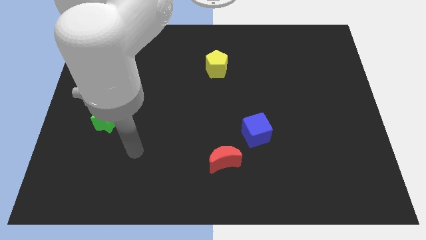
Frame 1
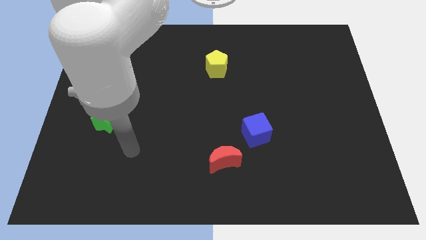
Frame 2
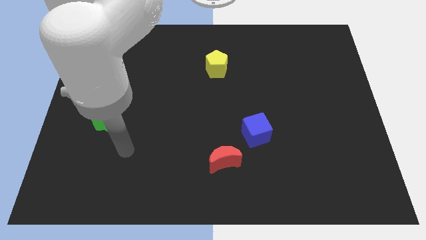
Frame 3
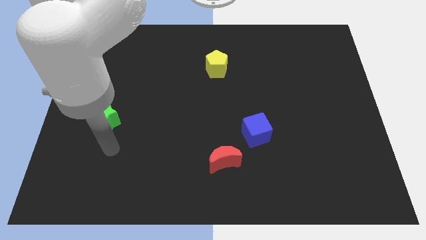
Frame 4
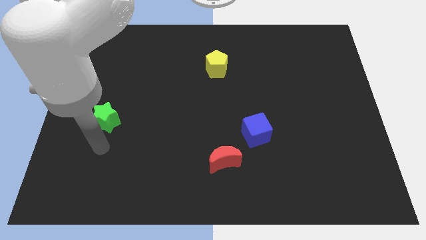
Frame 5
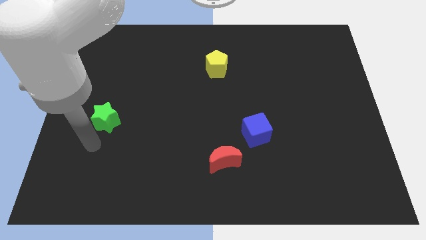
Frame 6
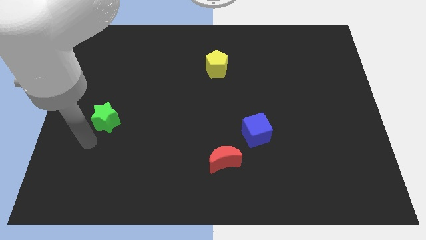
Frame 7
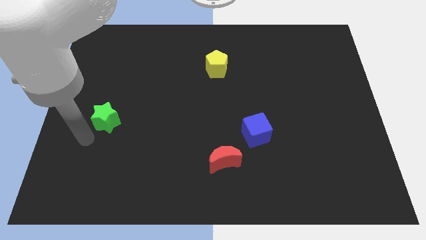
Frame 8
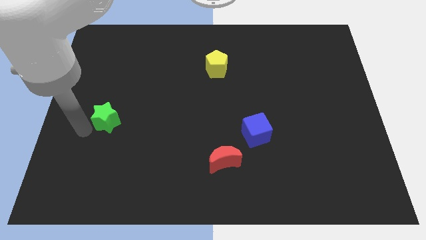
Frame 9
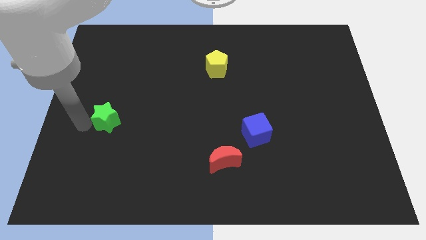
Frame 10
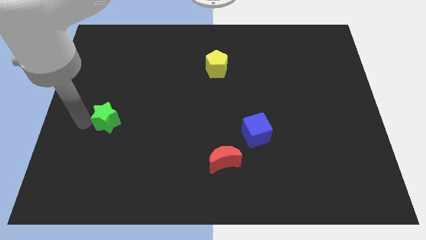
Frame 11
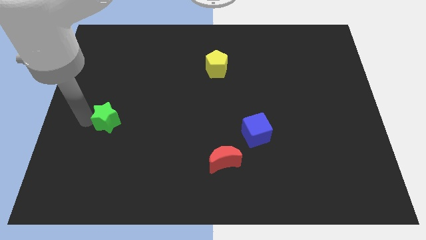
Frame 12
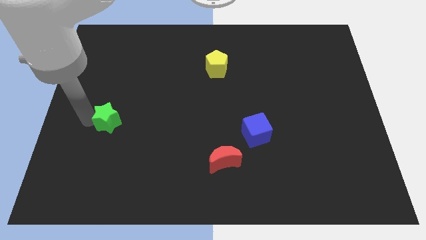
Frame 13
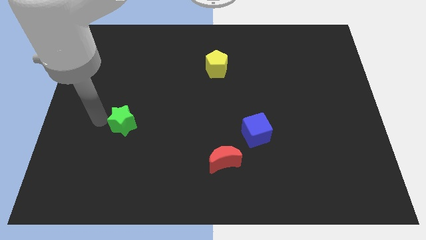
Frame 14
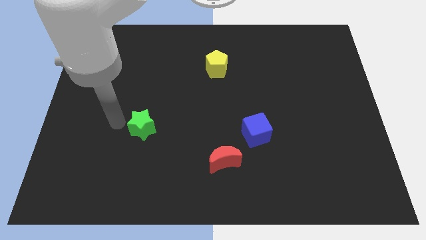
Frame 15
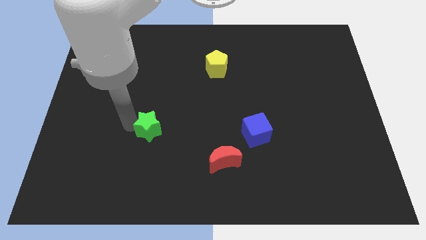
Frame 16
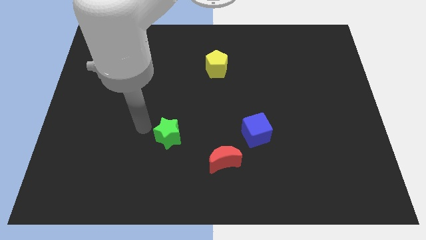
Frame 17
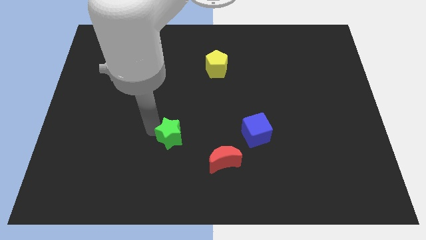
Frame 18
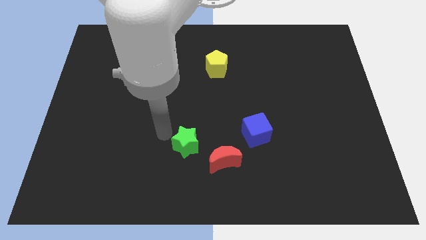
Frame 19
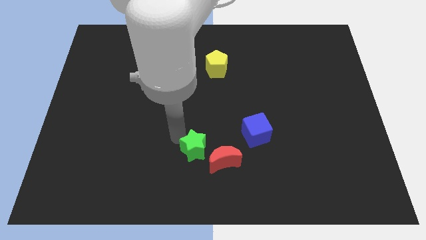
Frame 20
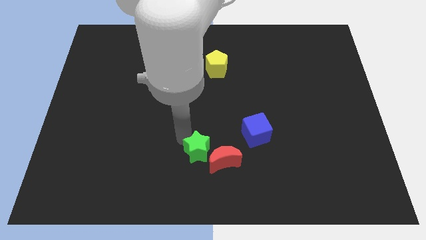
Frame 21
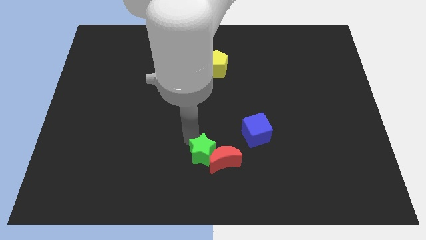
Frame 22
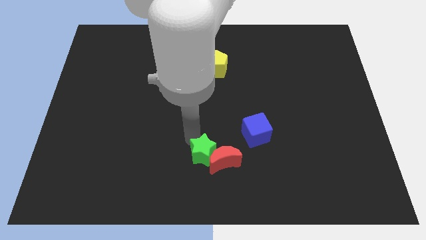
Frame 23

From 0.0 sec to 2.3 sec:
put the star towards the moon

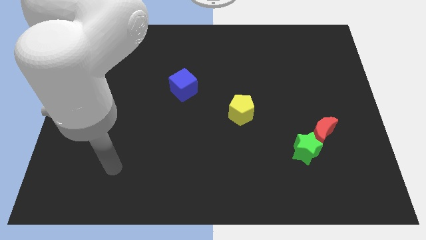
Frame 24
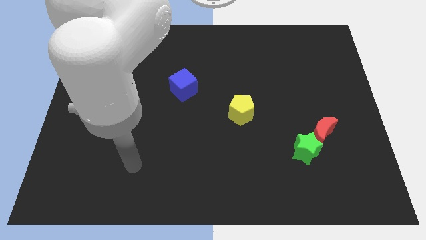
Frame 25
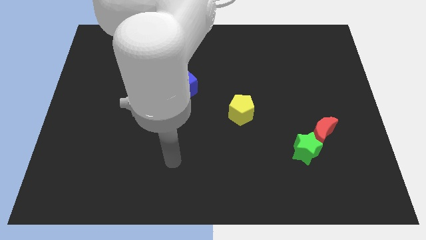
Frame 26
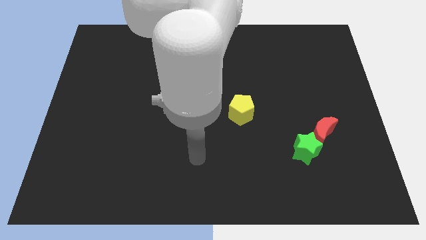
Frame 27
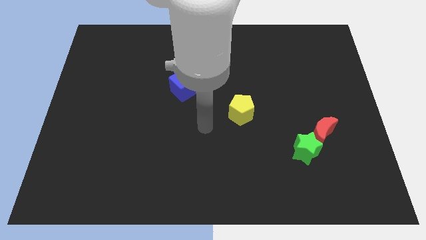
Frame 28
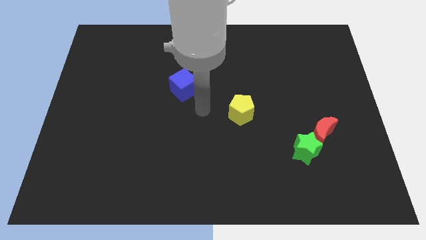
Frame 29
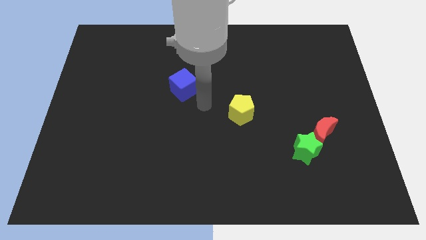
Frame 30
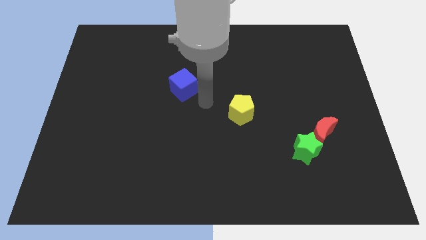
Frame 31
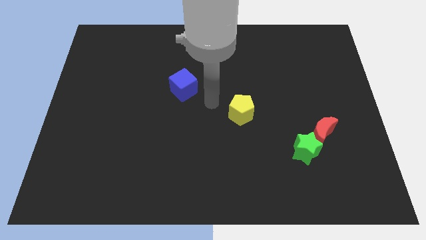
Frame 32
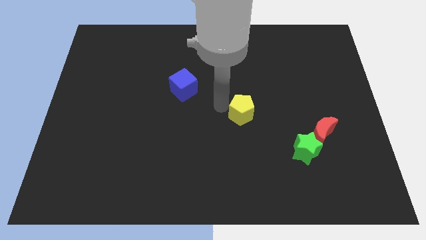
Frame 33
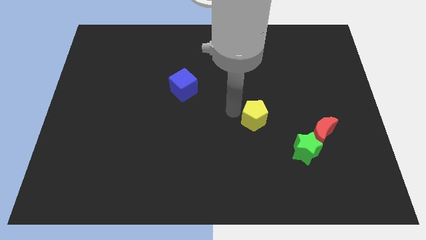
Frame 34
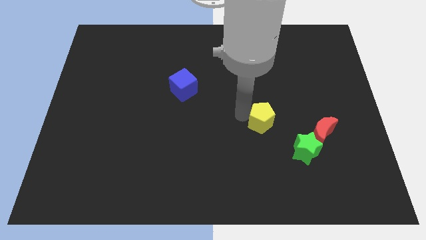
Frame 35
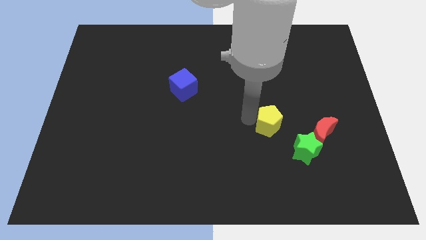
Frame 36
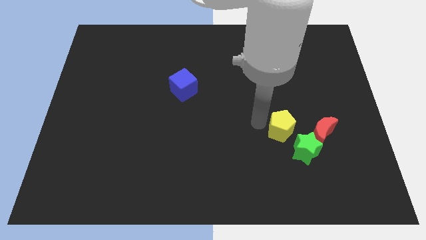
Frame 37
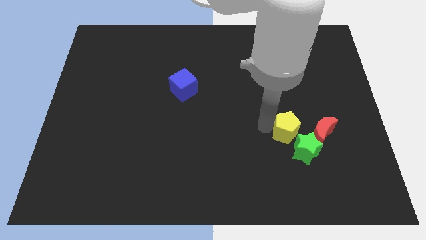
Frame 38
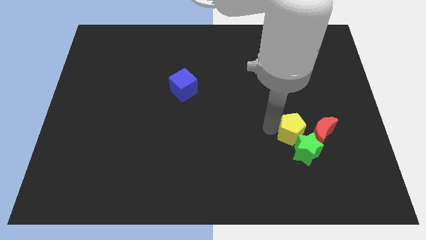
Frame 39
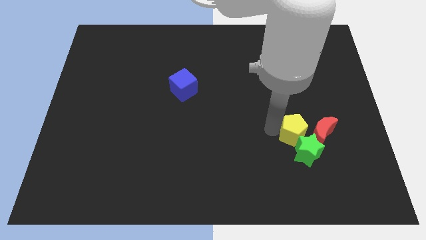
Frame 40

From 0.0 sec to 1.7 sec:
put the pentagon to the green star

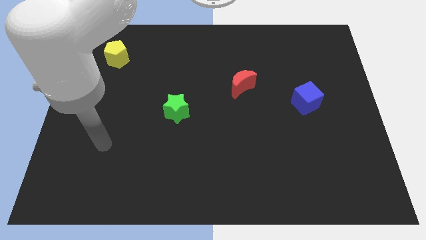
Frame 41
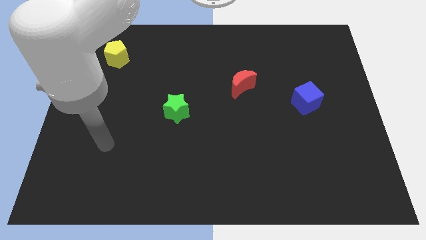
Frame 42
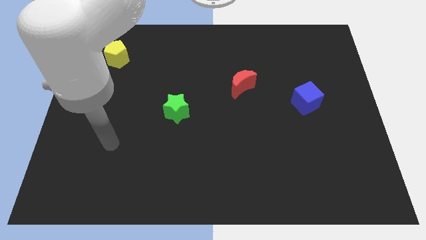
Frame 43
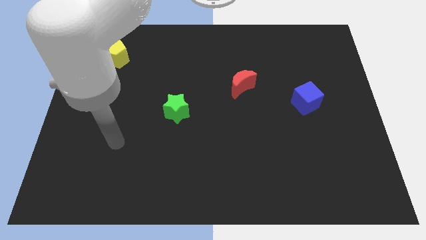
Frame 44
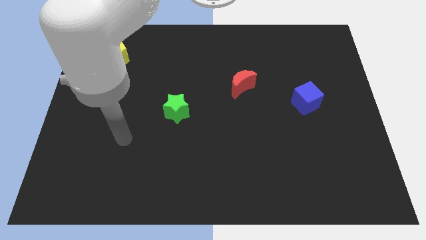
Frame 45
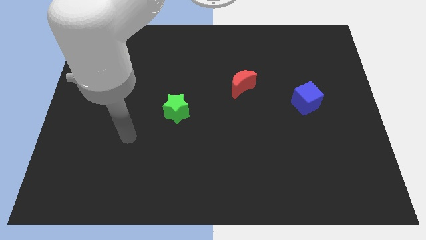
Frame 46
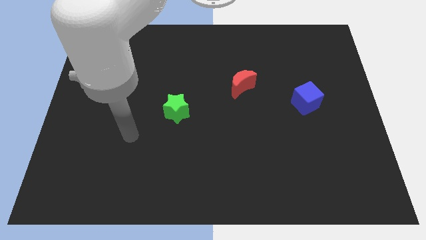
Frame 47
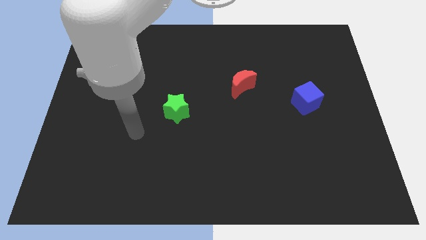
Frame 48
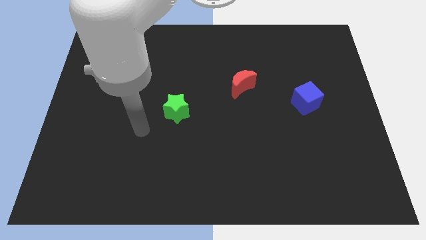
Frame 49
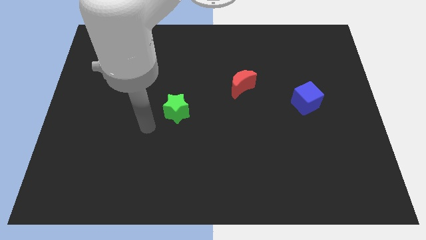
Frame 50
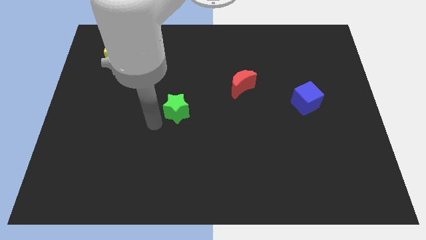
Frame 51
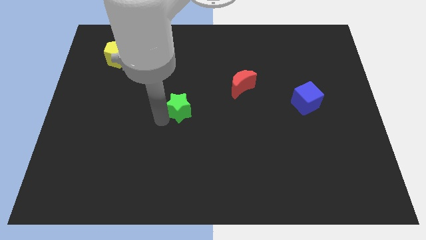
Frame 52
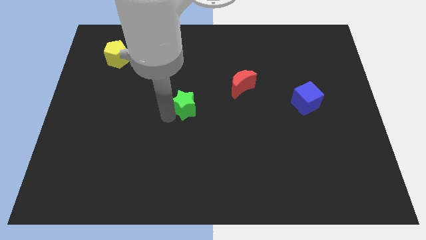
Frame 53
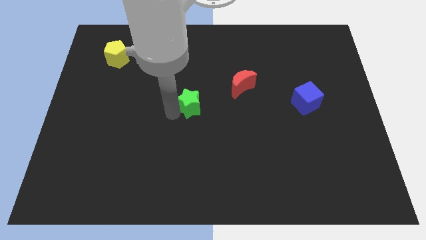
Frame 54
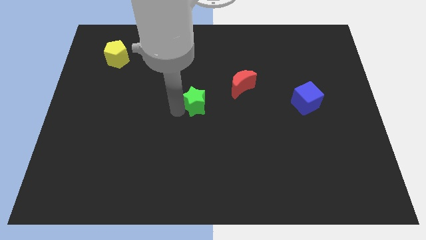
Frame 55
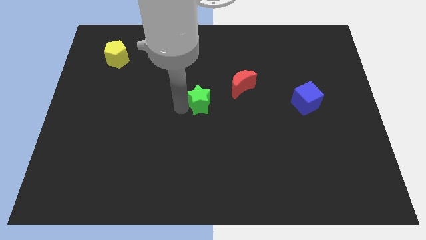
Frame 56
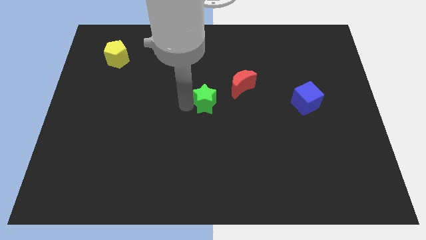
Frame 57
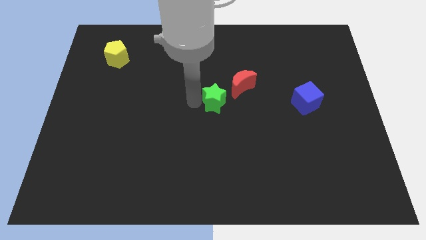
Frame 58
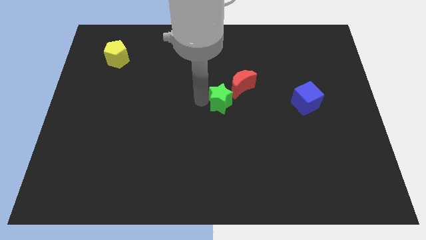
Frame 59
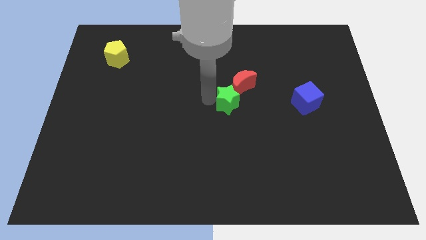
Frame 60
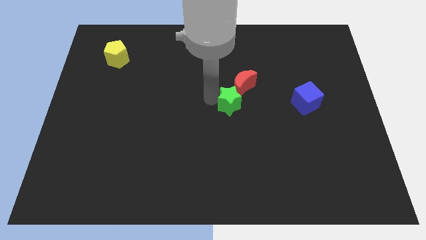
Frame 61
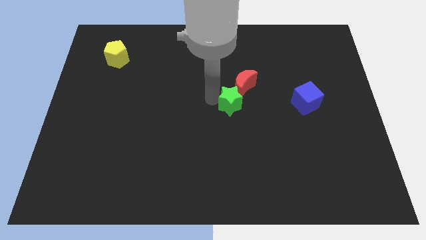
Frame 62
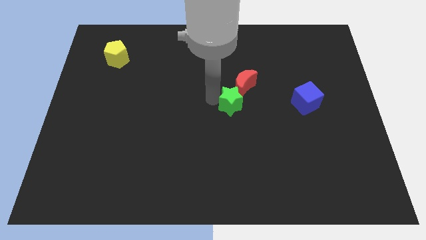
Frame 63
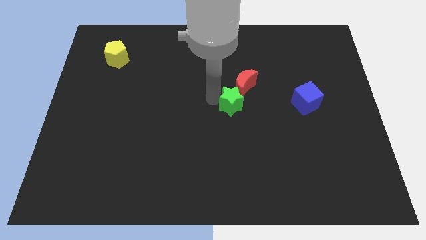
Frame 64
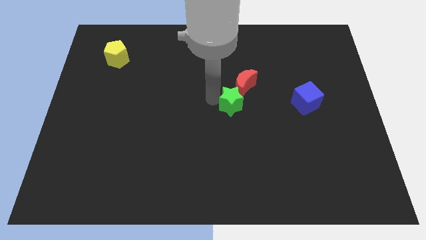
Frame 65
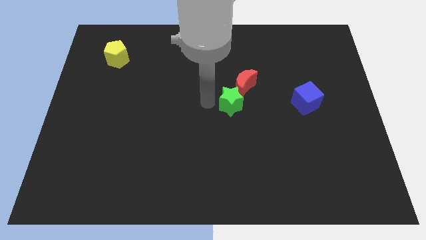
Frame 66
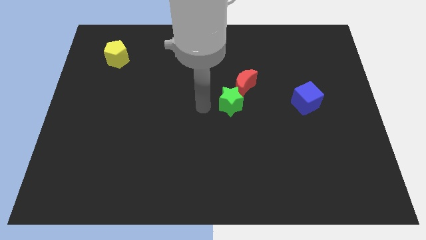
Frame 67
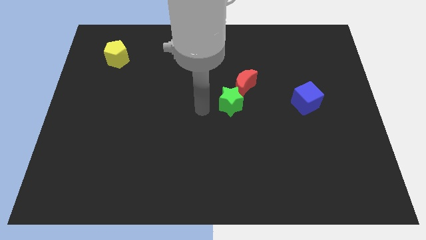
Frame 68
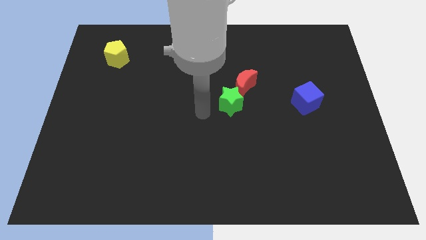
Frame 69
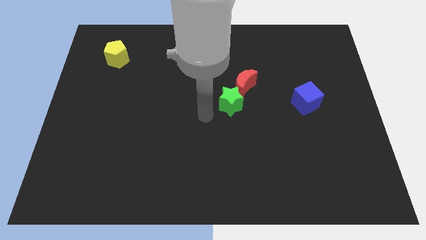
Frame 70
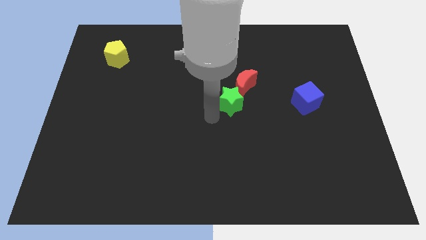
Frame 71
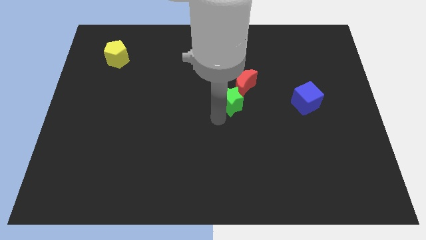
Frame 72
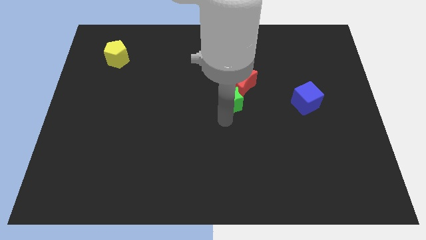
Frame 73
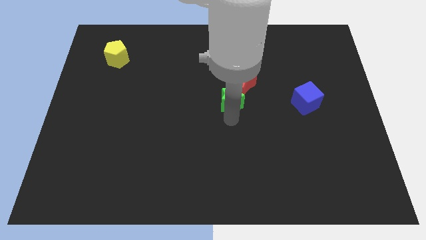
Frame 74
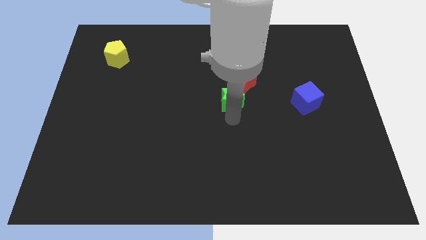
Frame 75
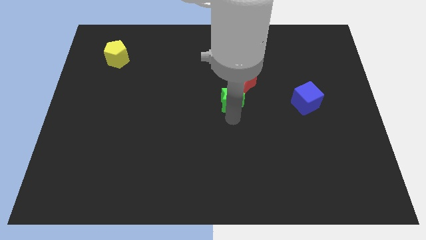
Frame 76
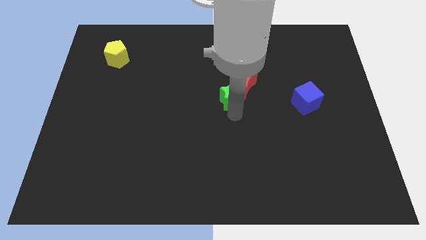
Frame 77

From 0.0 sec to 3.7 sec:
slide the star towards the red block

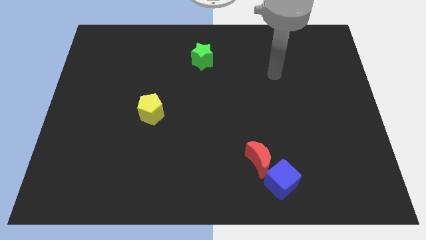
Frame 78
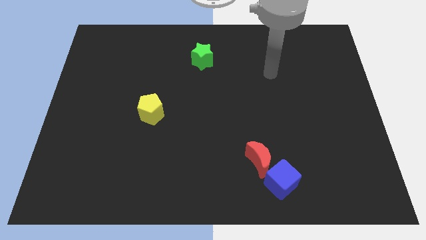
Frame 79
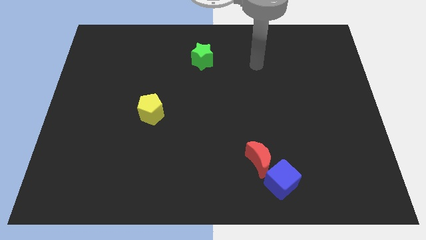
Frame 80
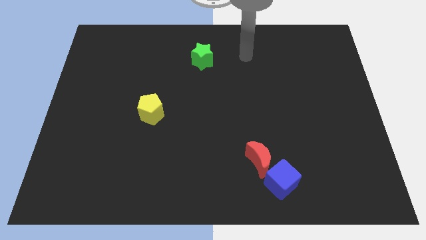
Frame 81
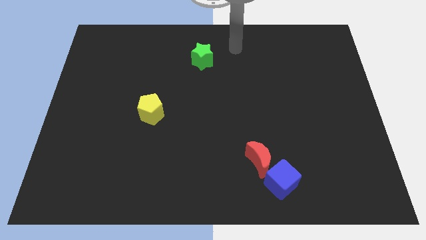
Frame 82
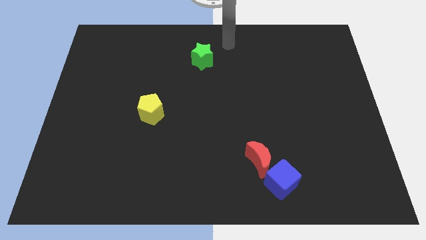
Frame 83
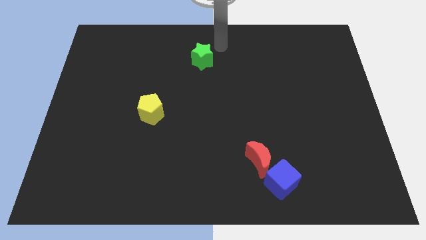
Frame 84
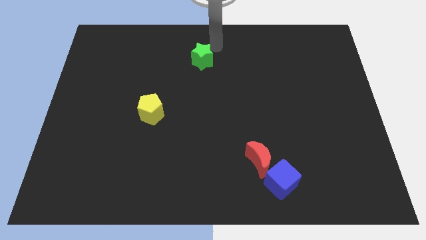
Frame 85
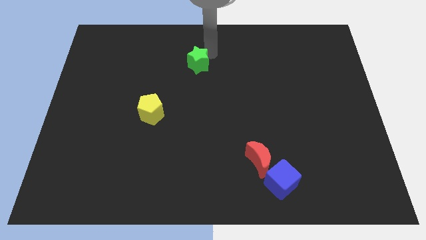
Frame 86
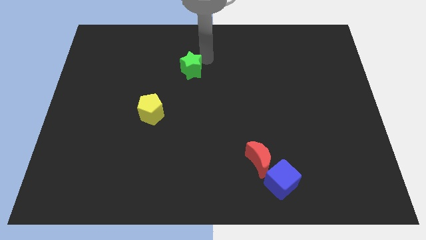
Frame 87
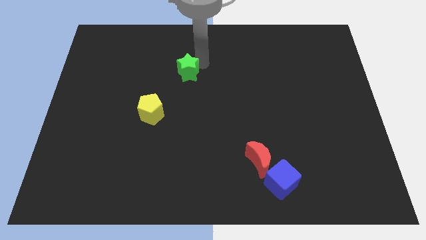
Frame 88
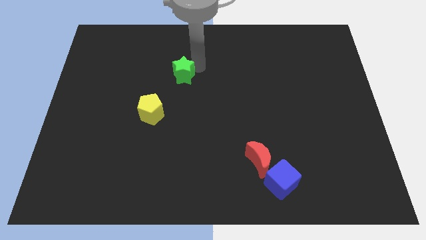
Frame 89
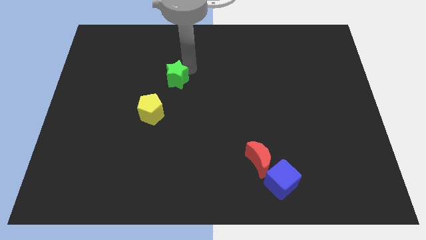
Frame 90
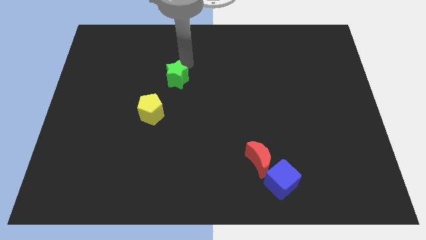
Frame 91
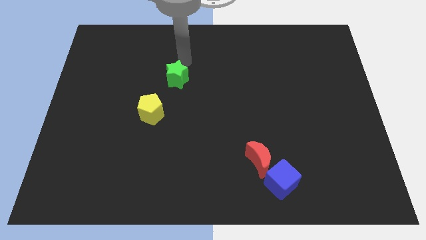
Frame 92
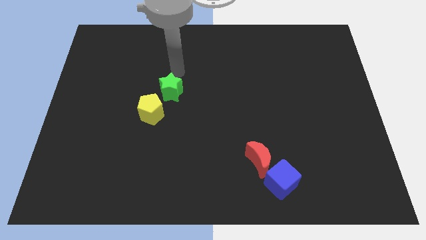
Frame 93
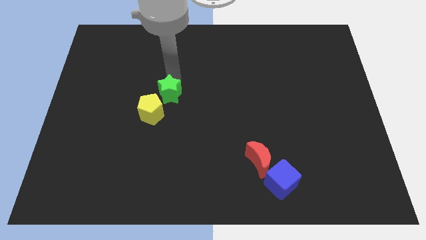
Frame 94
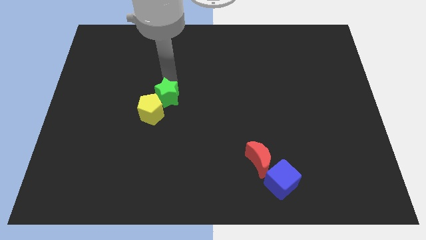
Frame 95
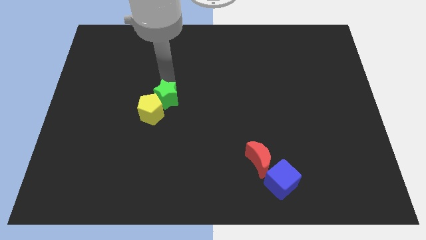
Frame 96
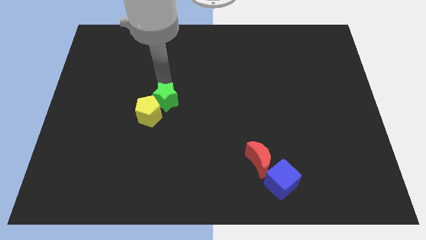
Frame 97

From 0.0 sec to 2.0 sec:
slide the green star to the pentagon
